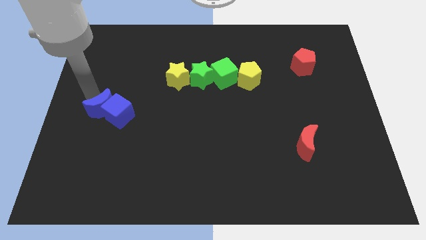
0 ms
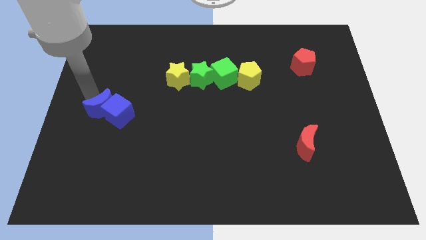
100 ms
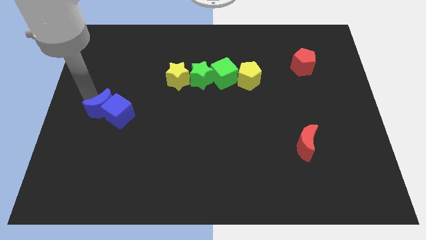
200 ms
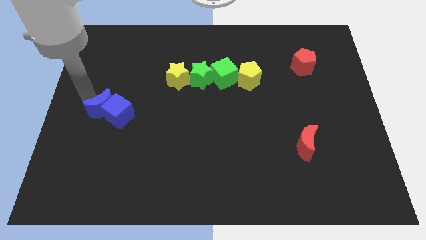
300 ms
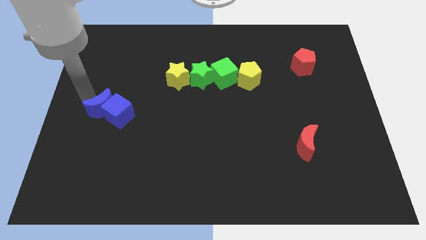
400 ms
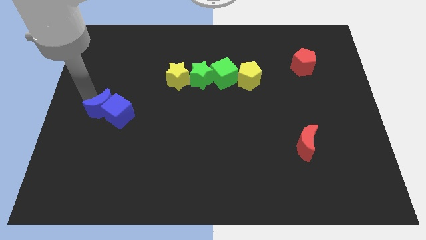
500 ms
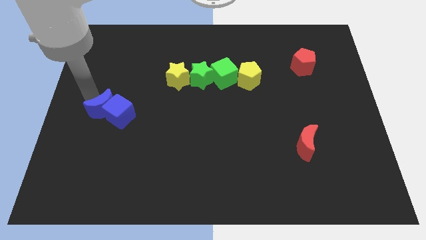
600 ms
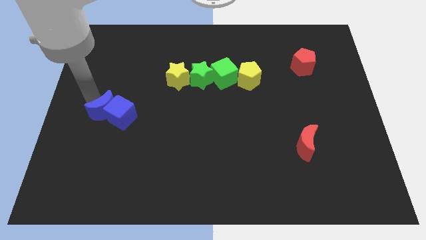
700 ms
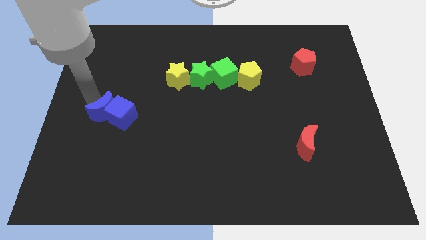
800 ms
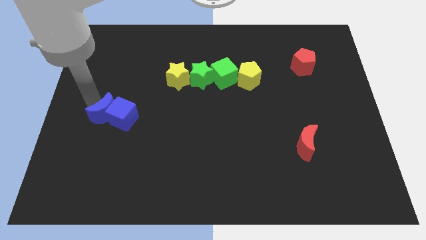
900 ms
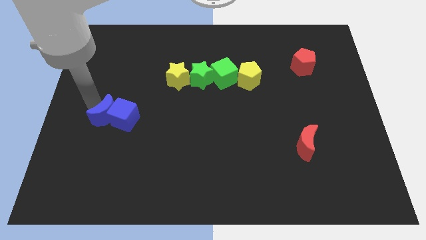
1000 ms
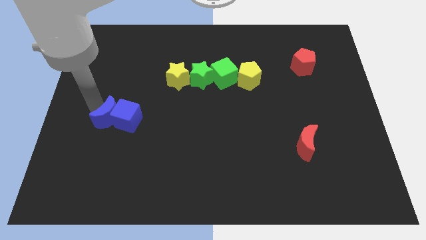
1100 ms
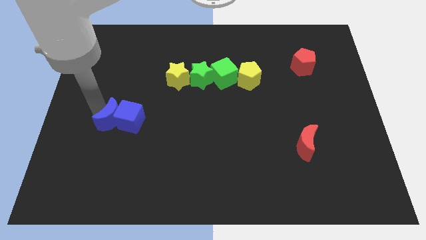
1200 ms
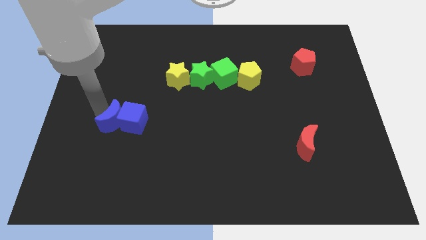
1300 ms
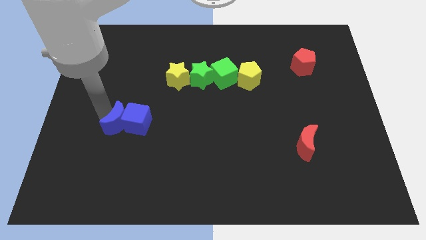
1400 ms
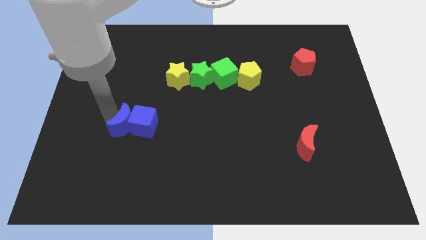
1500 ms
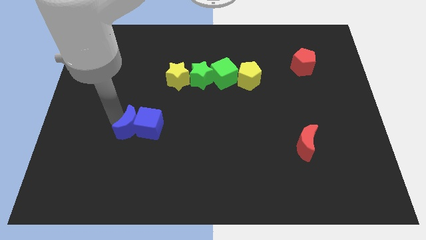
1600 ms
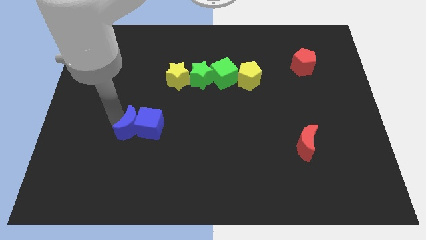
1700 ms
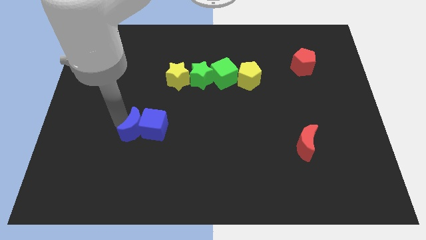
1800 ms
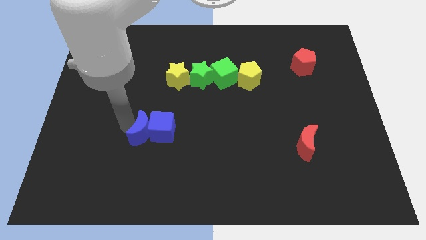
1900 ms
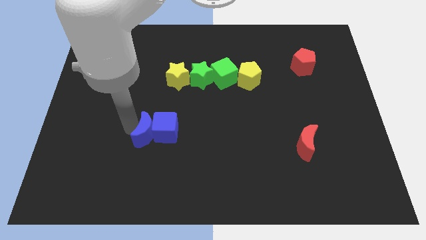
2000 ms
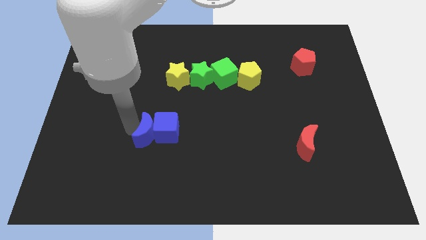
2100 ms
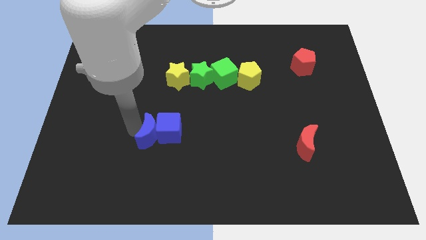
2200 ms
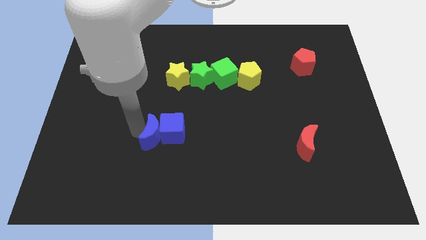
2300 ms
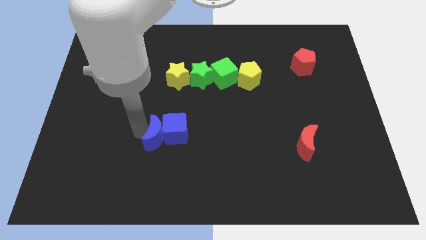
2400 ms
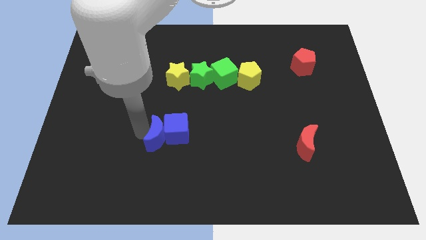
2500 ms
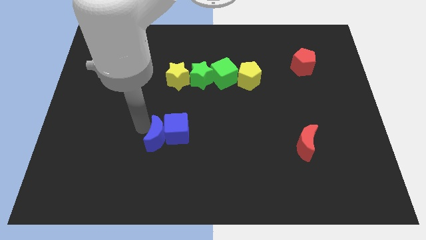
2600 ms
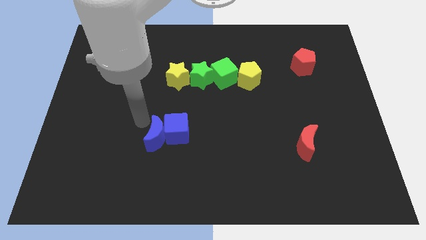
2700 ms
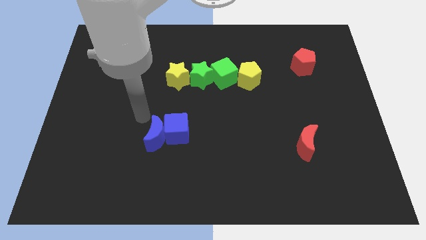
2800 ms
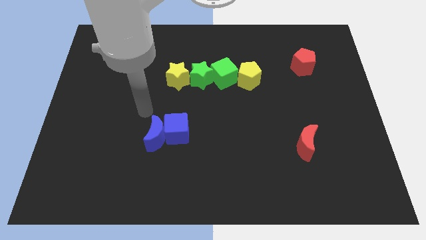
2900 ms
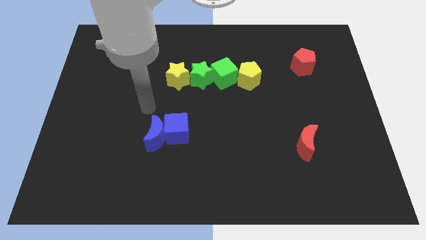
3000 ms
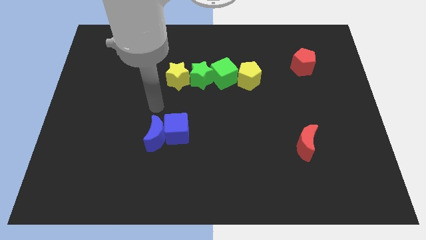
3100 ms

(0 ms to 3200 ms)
move both the blue blocks vertically on the bottom side of the yellow star

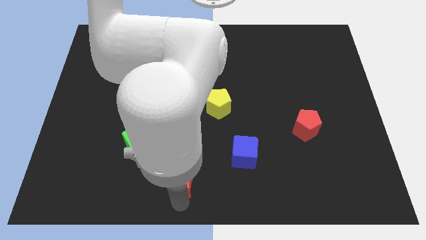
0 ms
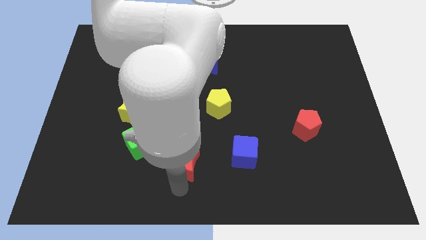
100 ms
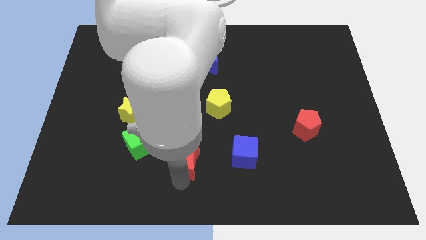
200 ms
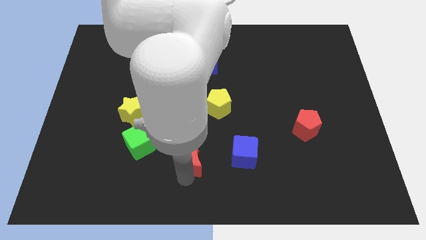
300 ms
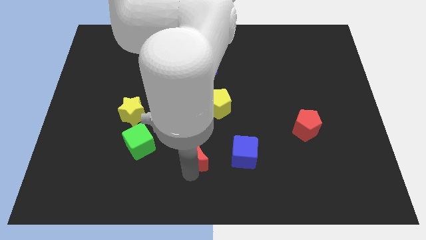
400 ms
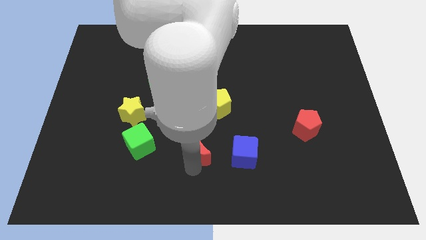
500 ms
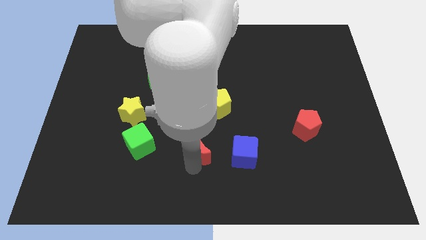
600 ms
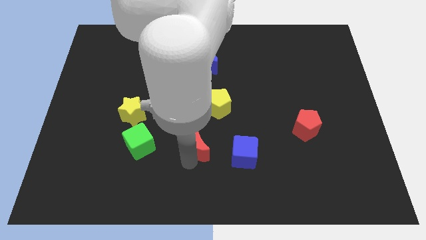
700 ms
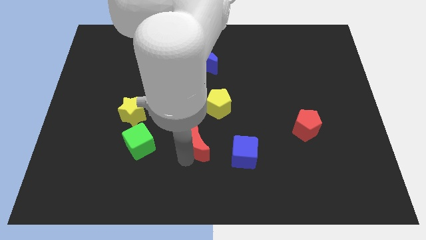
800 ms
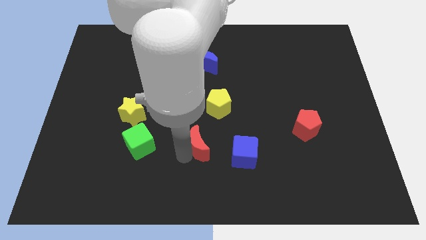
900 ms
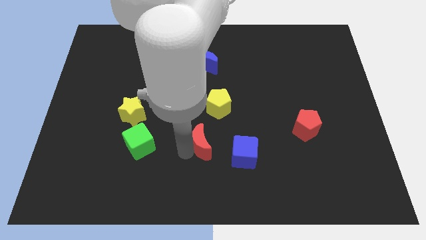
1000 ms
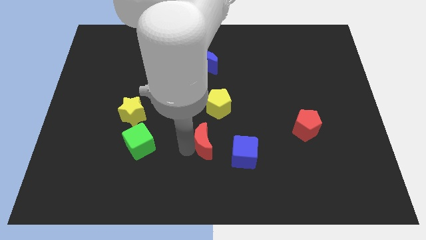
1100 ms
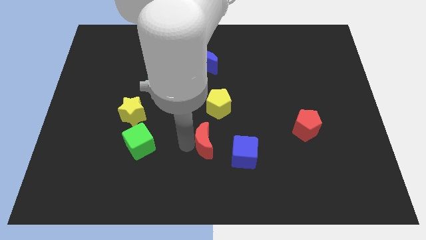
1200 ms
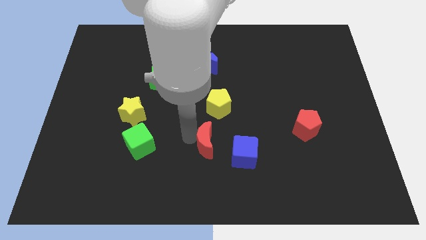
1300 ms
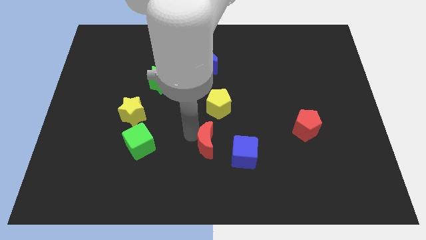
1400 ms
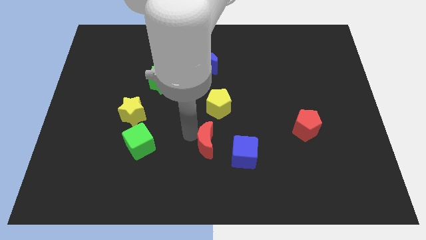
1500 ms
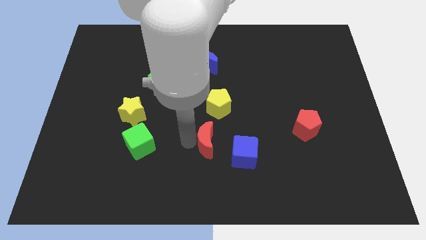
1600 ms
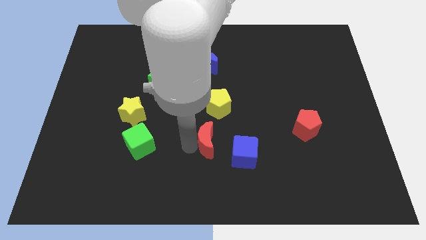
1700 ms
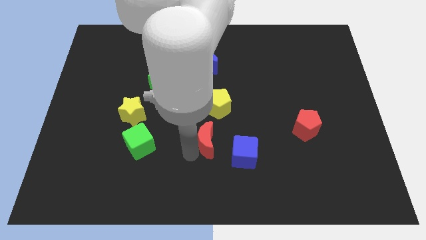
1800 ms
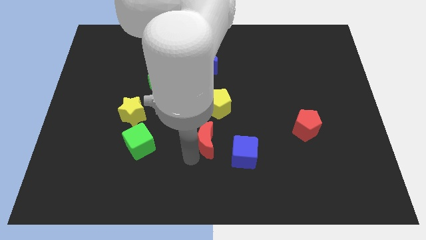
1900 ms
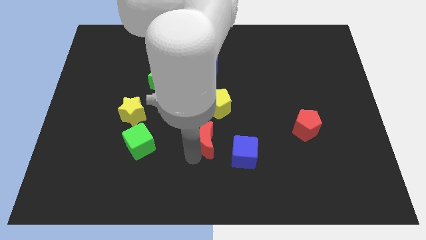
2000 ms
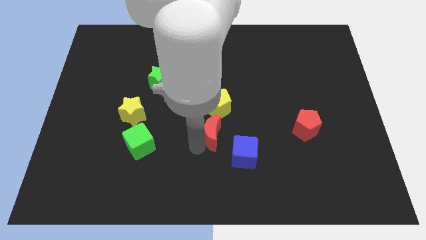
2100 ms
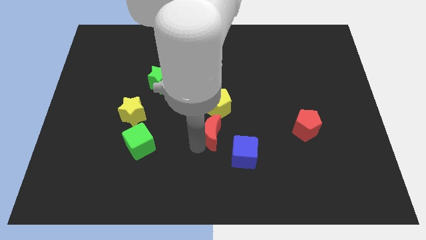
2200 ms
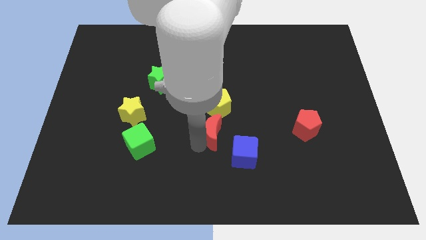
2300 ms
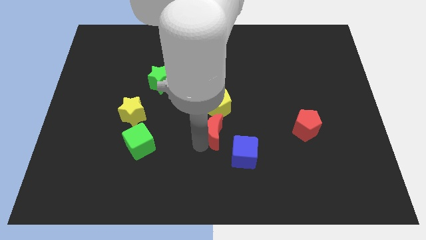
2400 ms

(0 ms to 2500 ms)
push the red crescent towards yellow pentagon

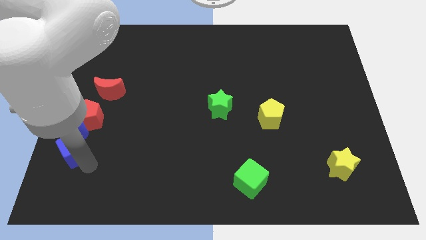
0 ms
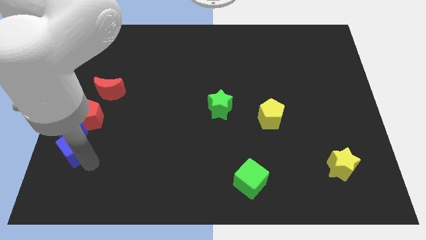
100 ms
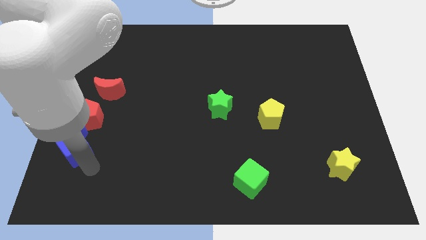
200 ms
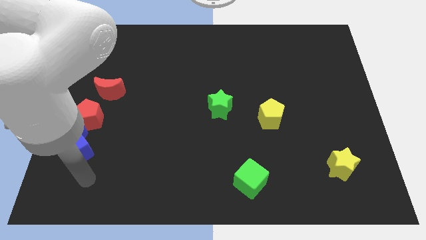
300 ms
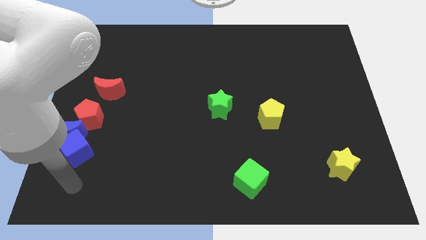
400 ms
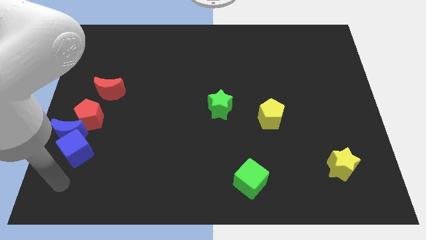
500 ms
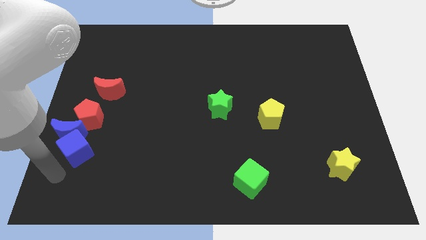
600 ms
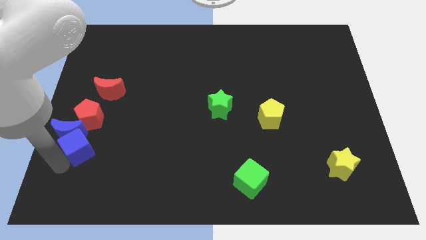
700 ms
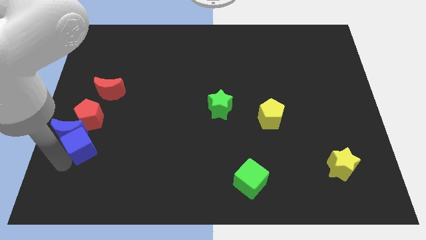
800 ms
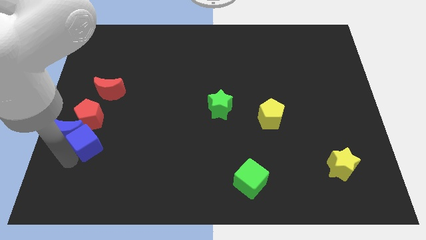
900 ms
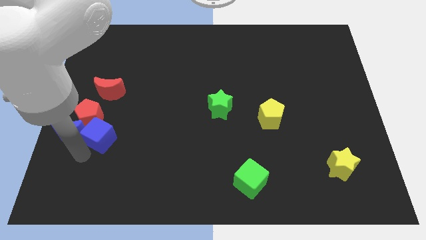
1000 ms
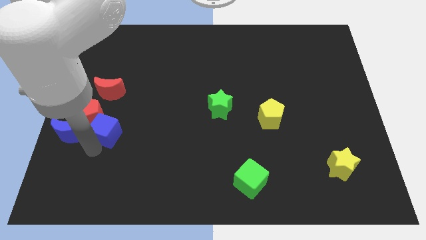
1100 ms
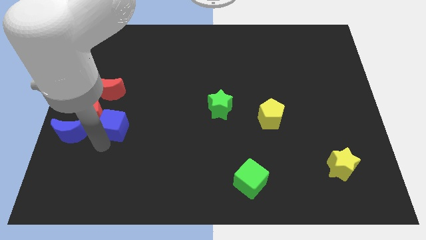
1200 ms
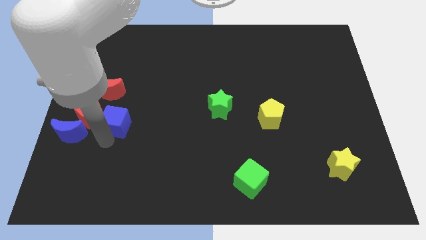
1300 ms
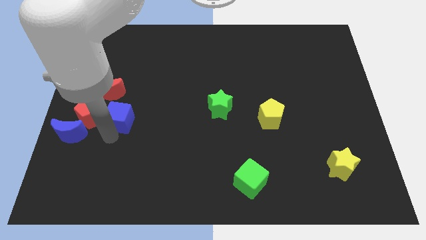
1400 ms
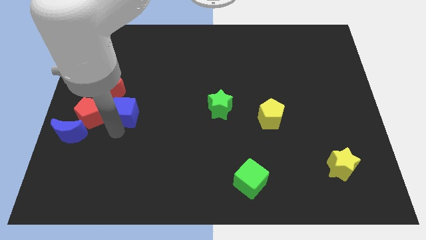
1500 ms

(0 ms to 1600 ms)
place the blue cube to the right side of the red pentagon

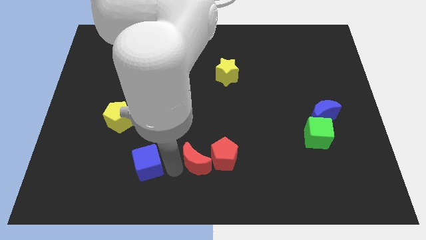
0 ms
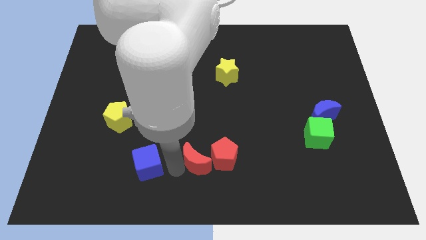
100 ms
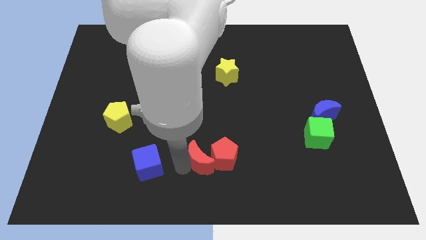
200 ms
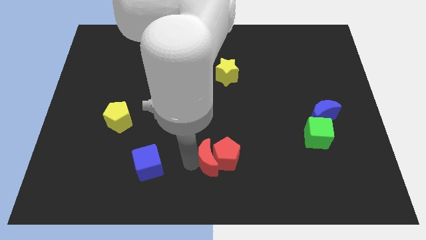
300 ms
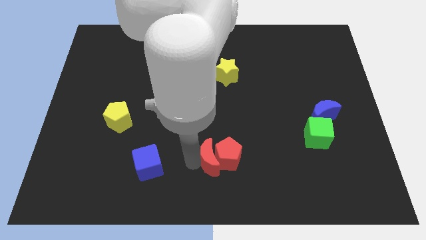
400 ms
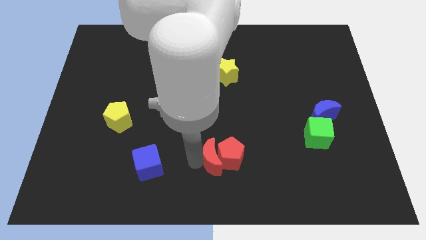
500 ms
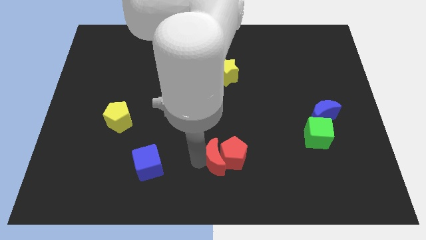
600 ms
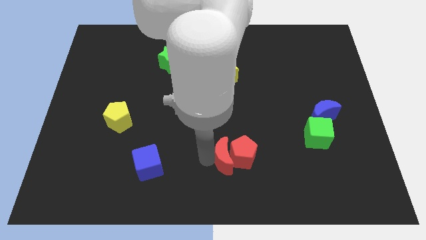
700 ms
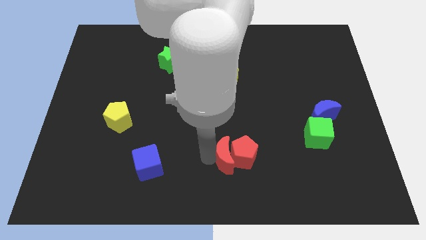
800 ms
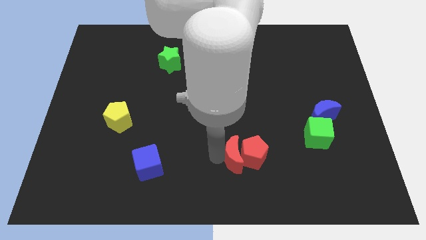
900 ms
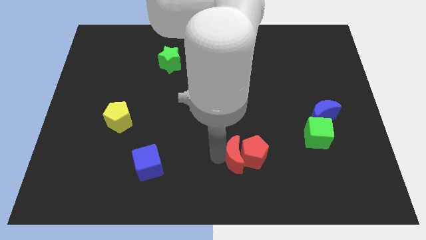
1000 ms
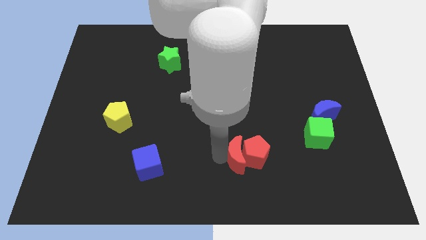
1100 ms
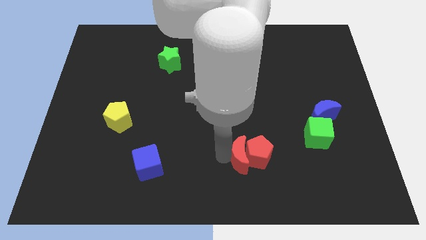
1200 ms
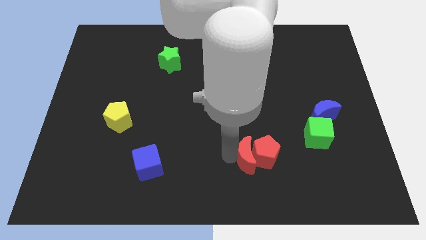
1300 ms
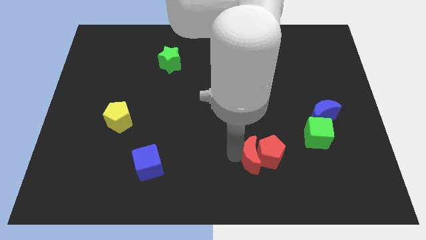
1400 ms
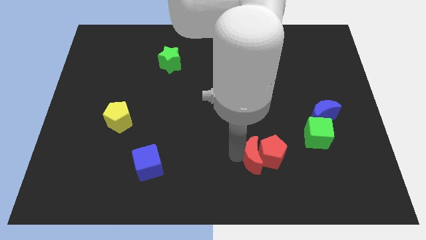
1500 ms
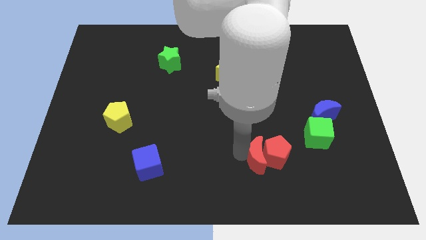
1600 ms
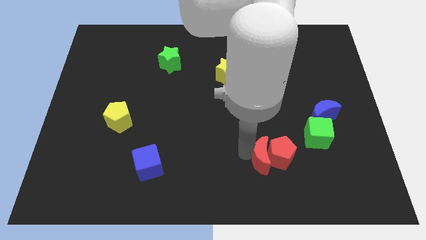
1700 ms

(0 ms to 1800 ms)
push the red blocks towards right side

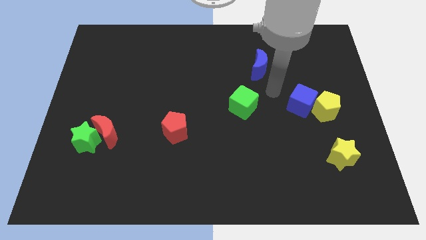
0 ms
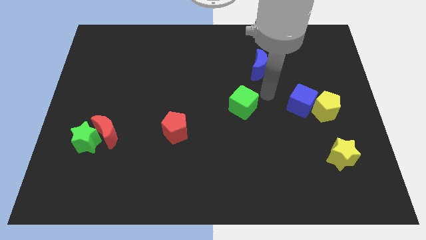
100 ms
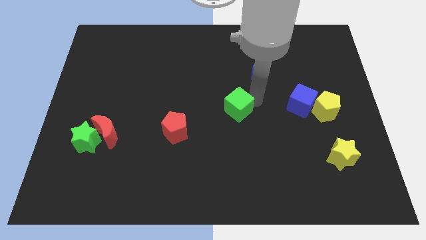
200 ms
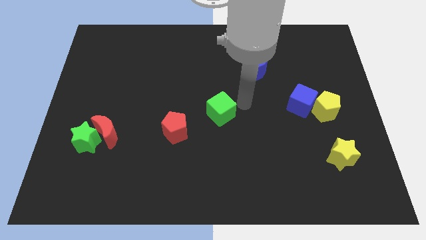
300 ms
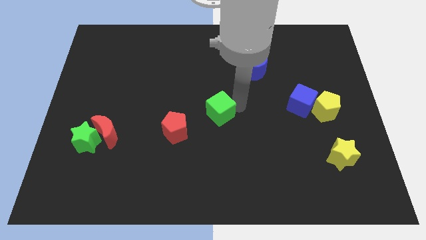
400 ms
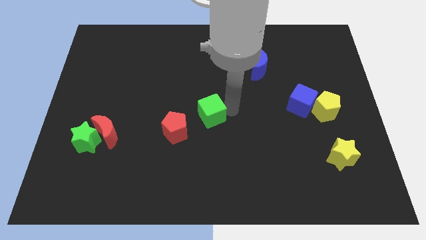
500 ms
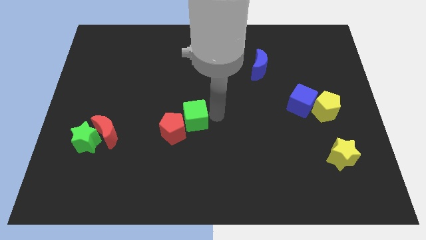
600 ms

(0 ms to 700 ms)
move green cube into the red pentagon
